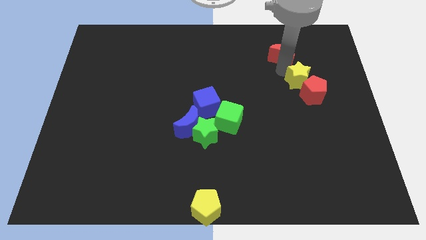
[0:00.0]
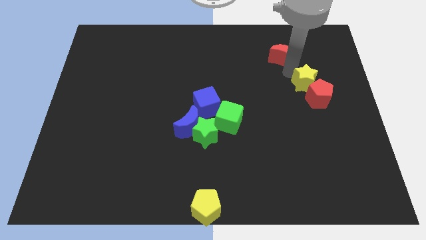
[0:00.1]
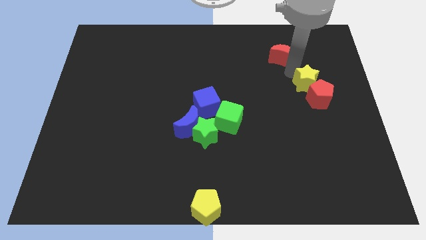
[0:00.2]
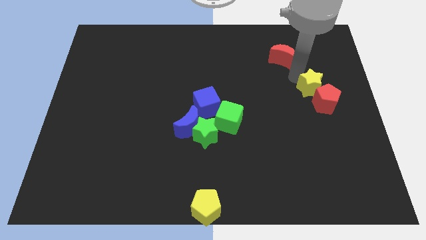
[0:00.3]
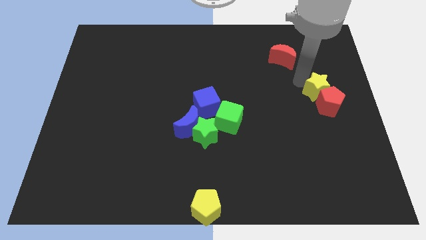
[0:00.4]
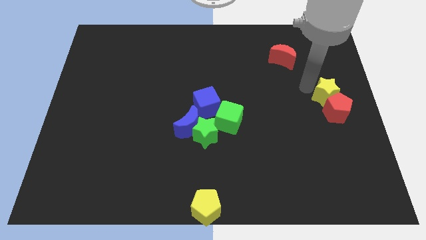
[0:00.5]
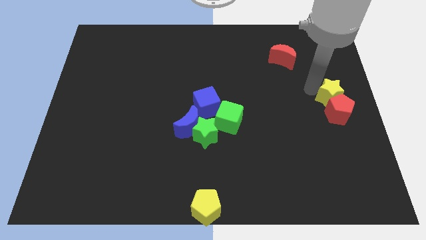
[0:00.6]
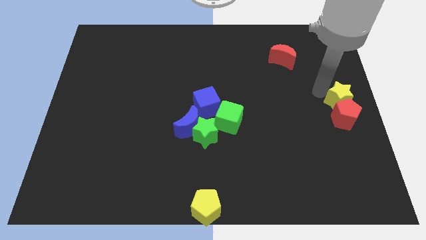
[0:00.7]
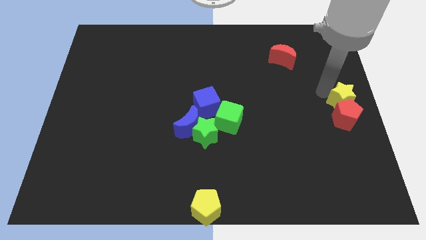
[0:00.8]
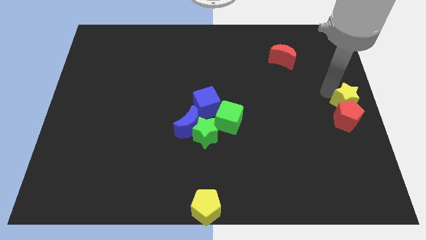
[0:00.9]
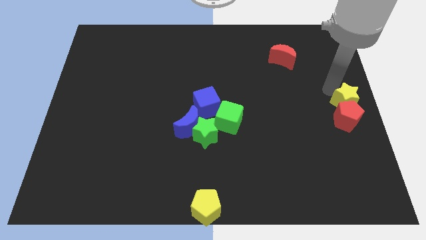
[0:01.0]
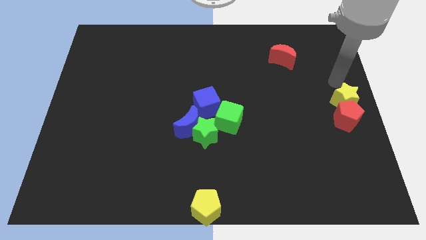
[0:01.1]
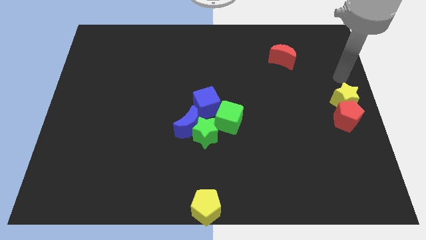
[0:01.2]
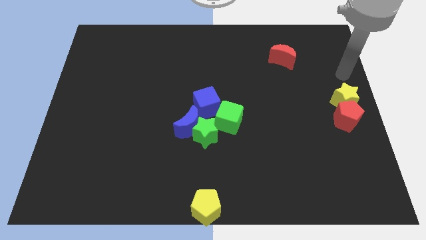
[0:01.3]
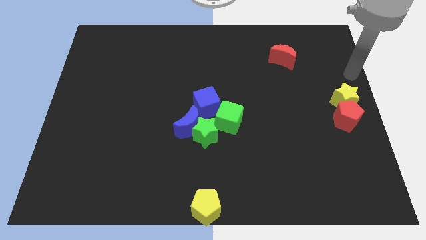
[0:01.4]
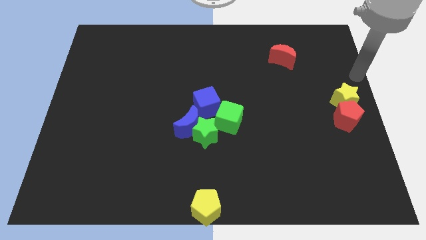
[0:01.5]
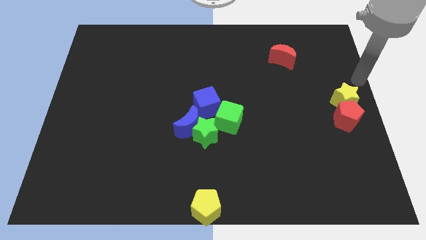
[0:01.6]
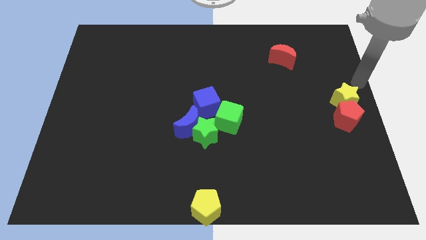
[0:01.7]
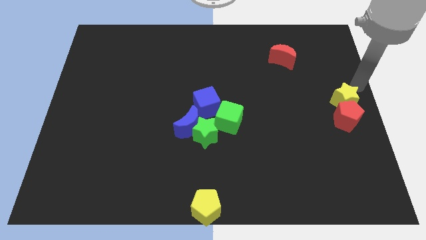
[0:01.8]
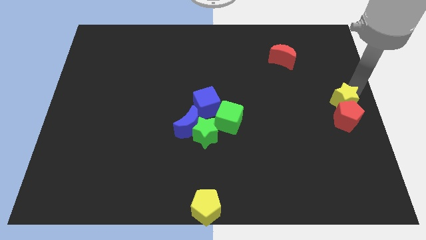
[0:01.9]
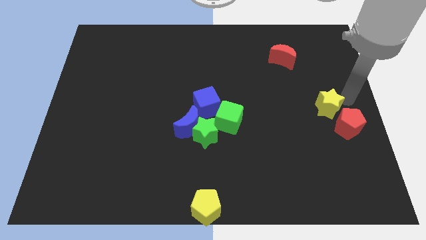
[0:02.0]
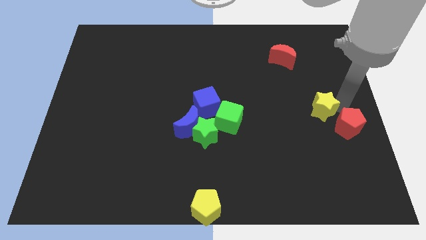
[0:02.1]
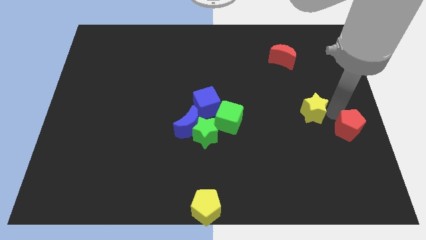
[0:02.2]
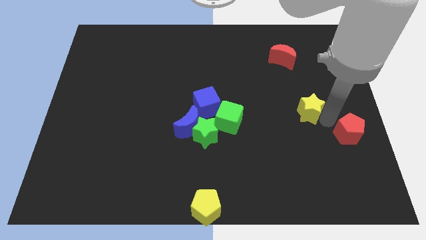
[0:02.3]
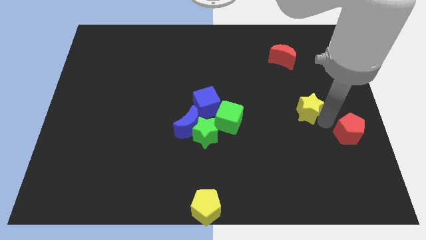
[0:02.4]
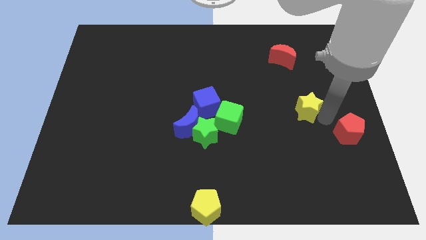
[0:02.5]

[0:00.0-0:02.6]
push the yellow star to the top left of the red pentagon

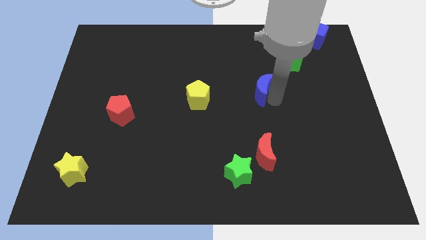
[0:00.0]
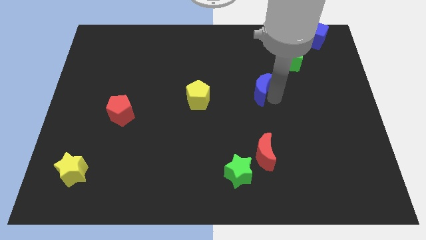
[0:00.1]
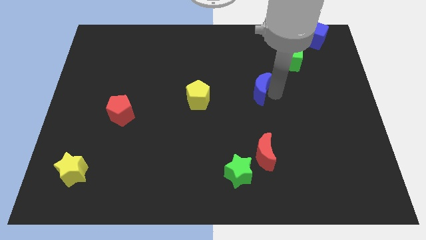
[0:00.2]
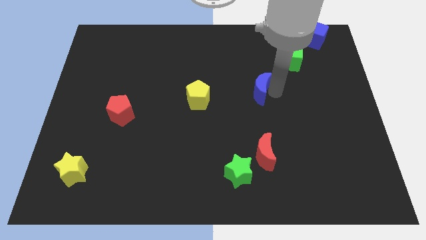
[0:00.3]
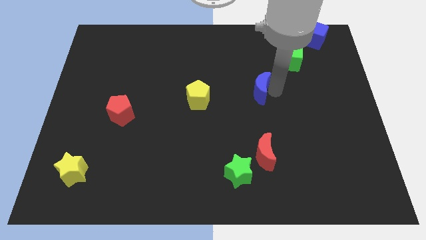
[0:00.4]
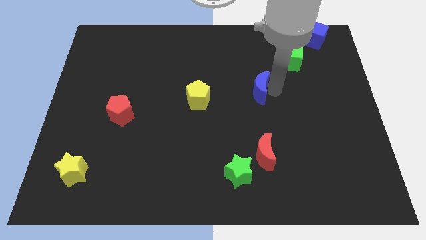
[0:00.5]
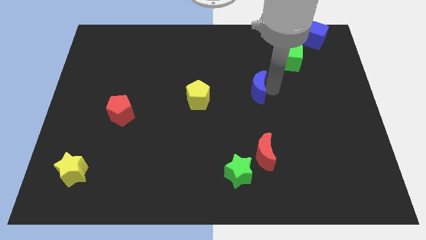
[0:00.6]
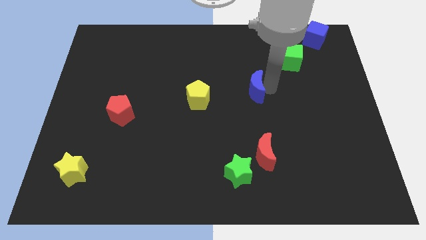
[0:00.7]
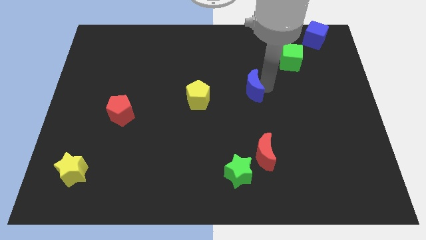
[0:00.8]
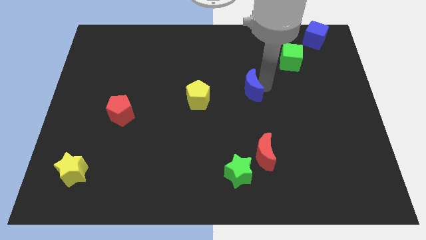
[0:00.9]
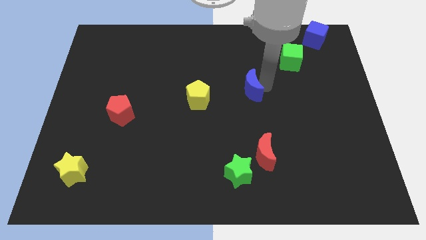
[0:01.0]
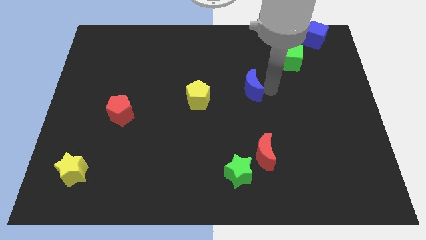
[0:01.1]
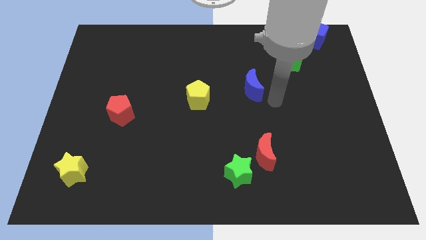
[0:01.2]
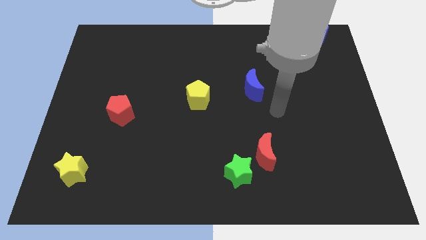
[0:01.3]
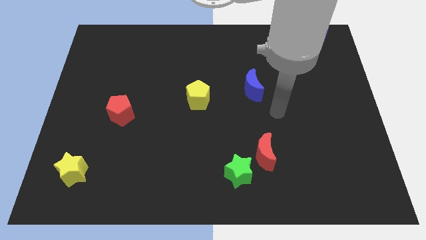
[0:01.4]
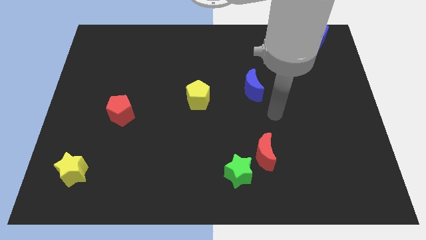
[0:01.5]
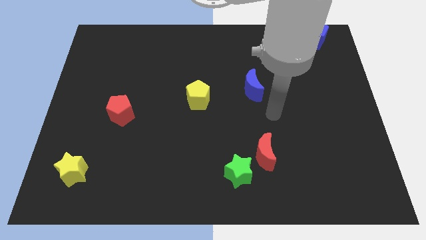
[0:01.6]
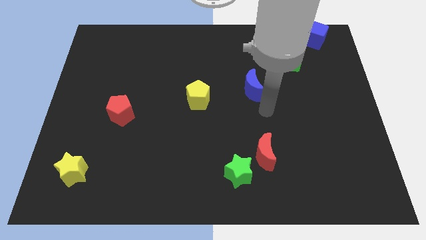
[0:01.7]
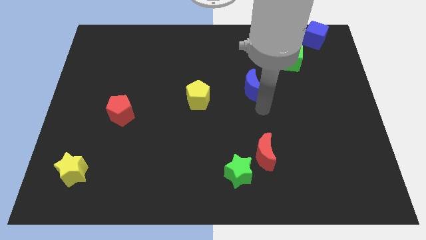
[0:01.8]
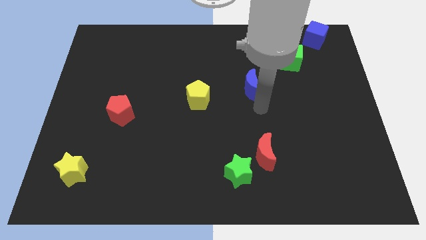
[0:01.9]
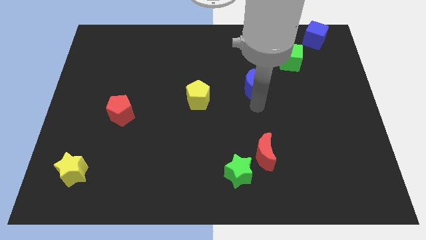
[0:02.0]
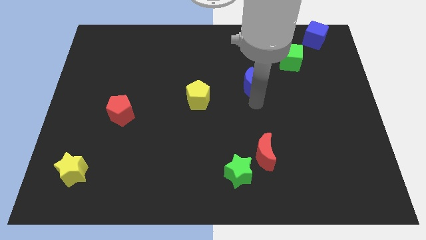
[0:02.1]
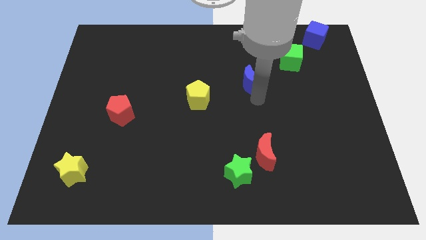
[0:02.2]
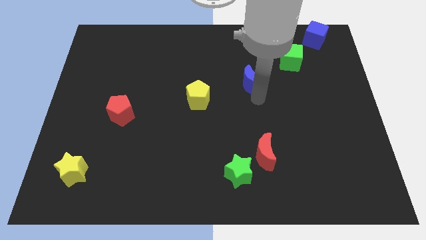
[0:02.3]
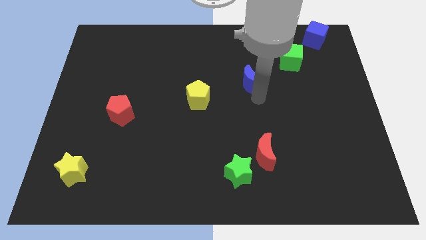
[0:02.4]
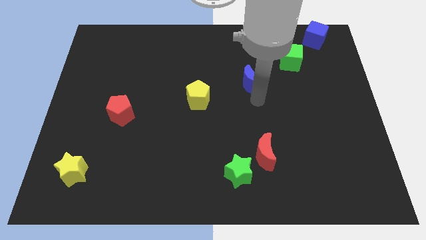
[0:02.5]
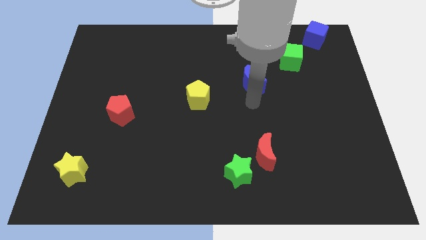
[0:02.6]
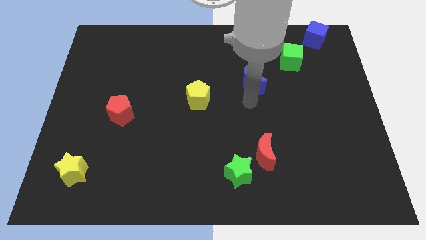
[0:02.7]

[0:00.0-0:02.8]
push the blue crescent between green cube and yellow pentagon

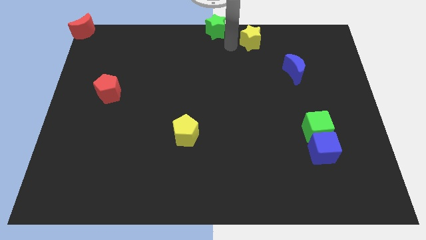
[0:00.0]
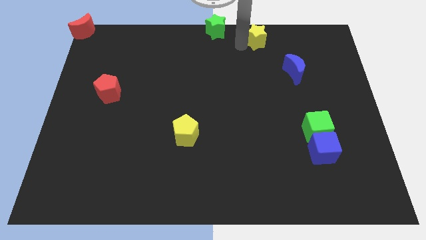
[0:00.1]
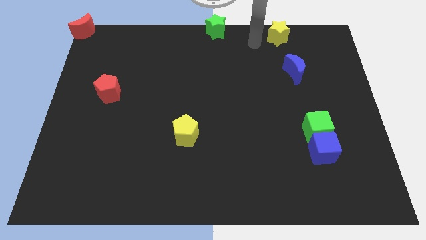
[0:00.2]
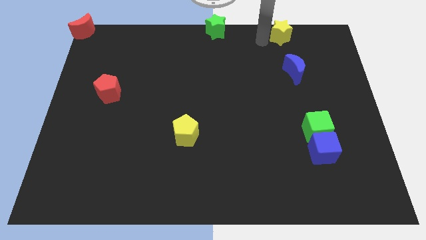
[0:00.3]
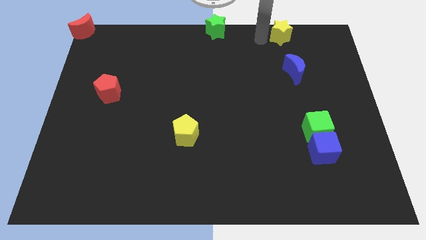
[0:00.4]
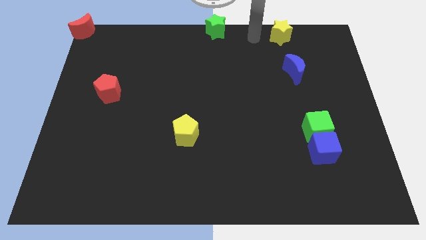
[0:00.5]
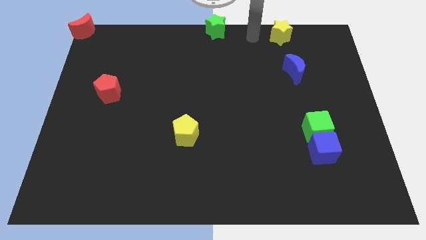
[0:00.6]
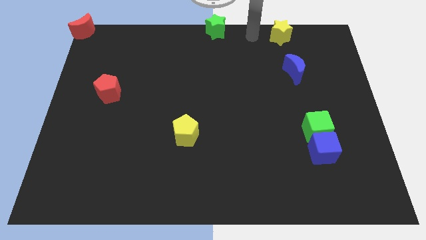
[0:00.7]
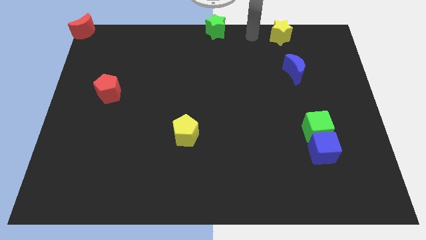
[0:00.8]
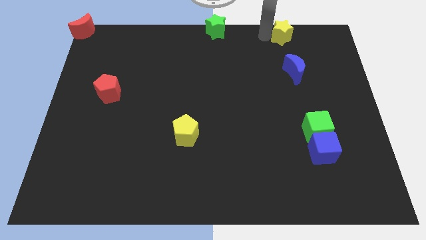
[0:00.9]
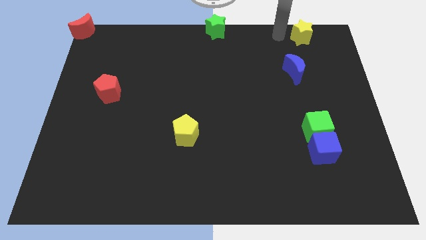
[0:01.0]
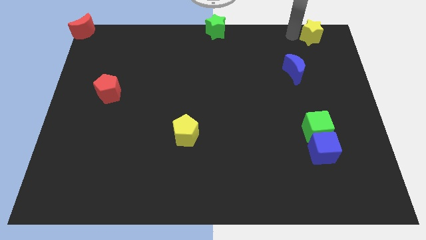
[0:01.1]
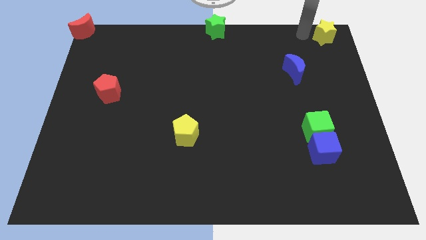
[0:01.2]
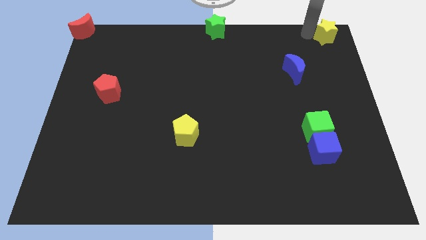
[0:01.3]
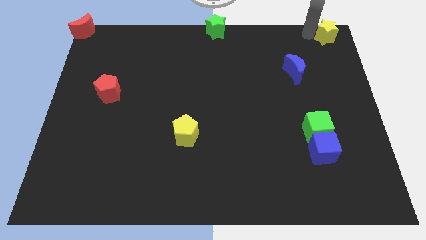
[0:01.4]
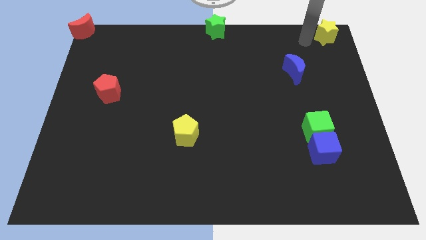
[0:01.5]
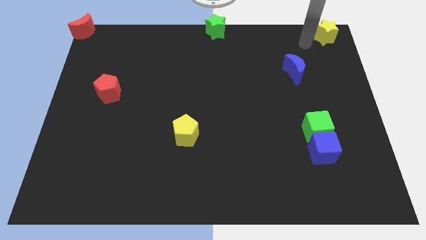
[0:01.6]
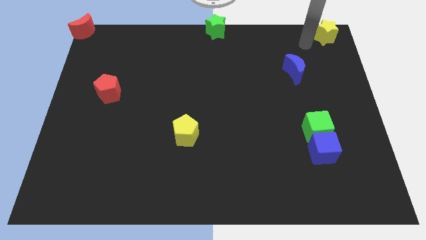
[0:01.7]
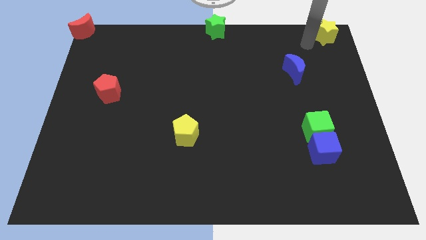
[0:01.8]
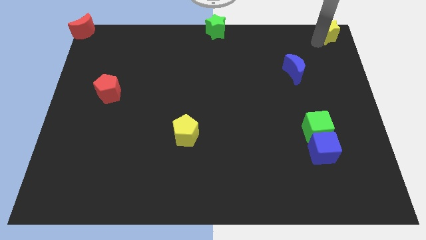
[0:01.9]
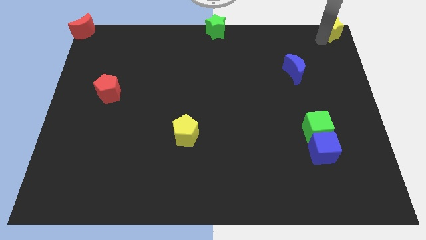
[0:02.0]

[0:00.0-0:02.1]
place the yellow star to the top right corner of the board

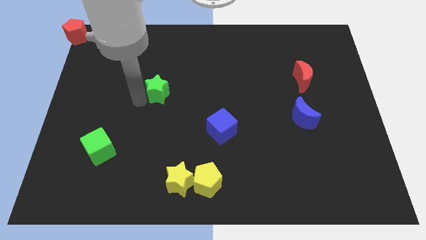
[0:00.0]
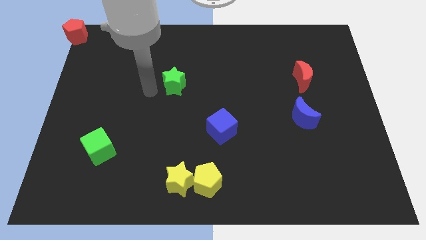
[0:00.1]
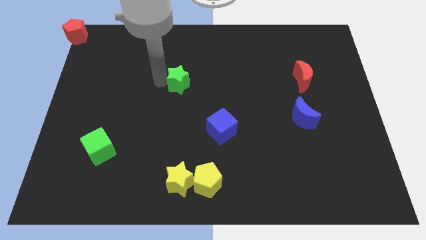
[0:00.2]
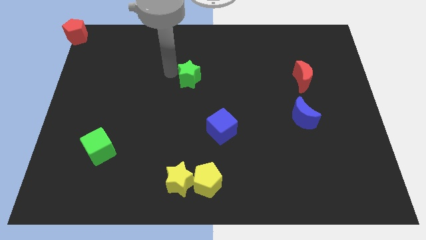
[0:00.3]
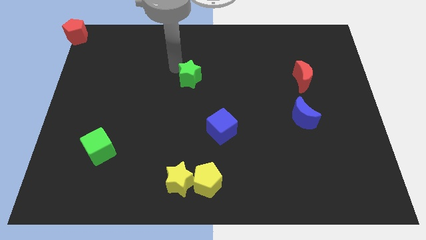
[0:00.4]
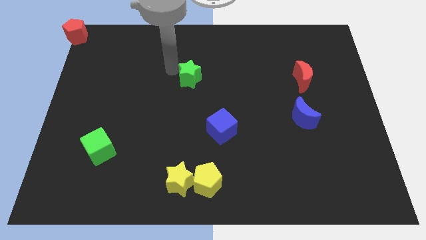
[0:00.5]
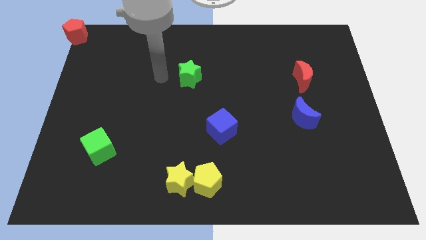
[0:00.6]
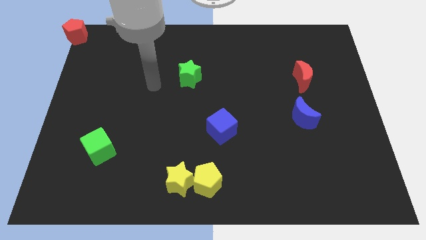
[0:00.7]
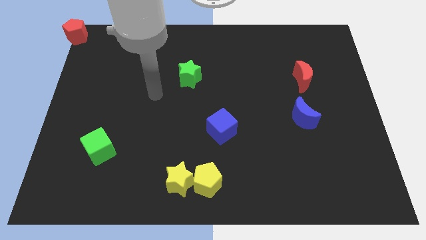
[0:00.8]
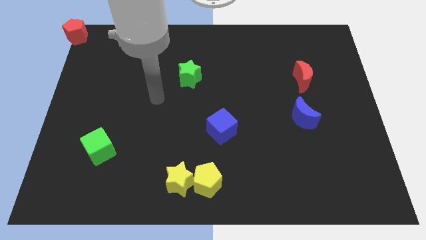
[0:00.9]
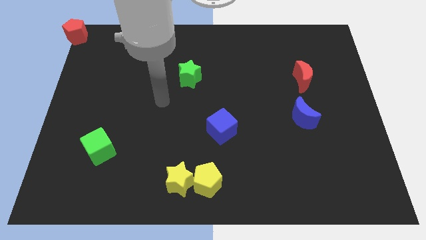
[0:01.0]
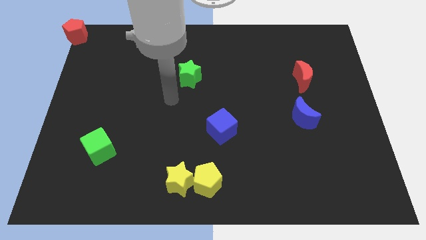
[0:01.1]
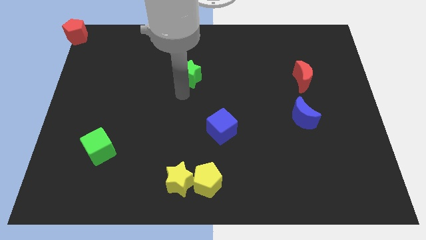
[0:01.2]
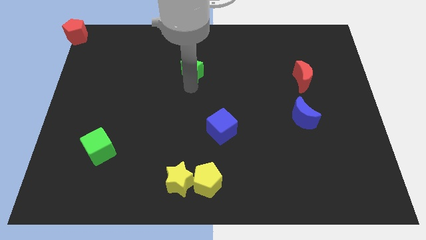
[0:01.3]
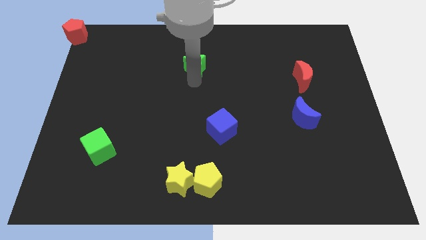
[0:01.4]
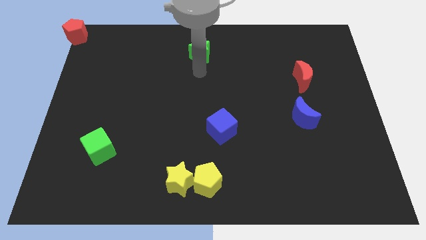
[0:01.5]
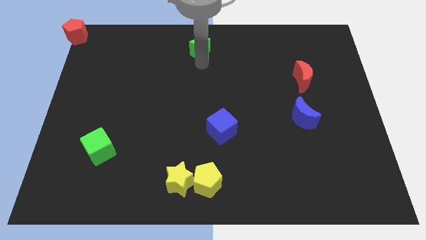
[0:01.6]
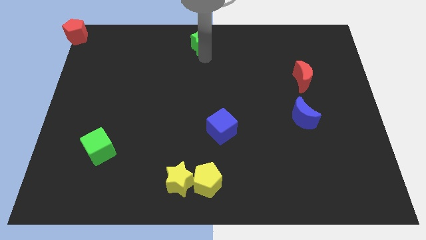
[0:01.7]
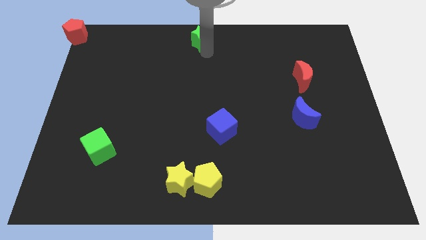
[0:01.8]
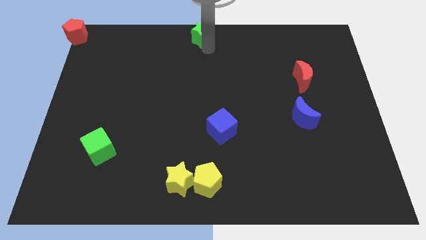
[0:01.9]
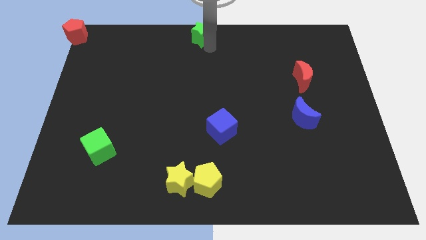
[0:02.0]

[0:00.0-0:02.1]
move the green star to the top center
